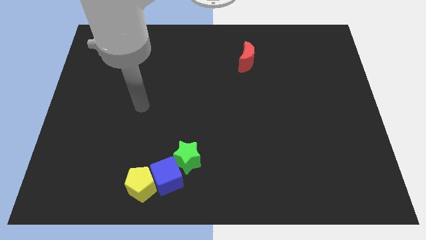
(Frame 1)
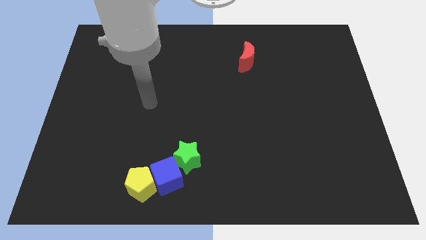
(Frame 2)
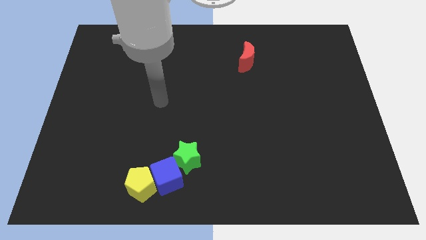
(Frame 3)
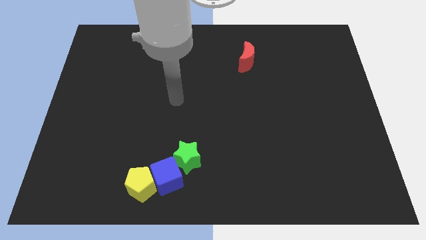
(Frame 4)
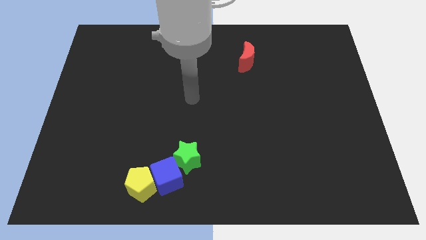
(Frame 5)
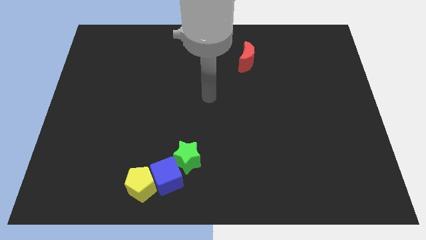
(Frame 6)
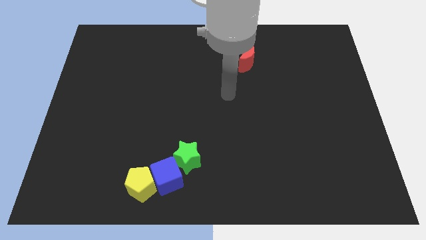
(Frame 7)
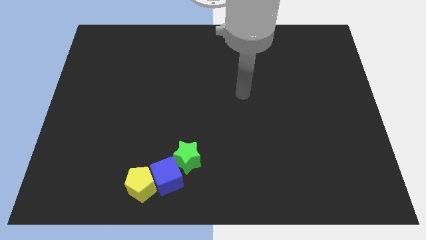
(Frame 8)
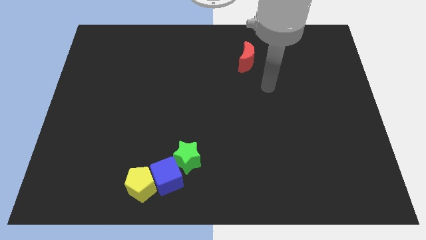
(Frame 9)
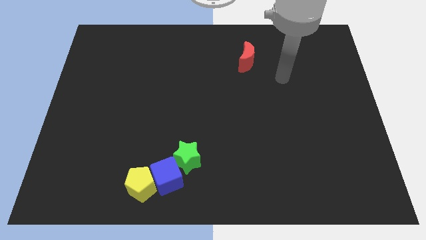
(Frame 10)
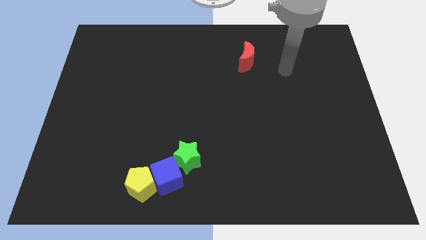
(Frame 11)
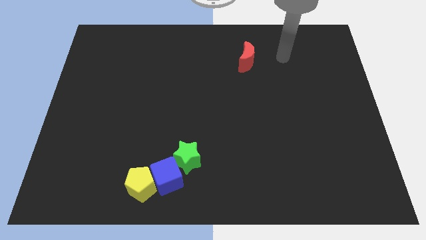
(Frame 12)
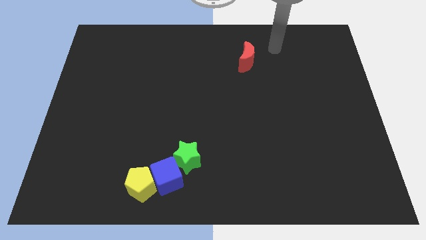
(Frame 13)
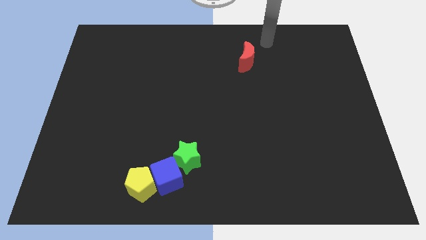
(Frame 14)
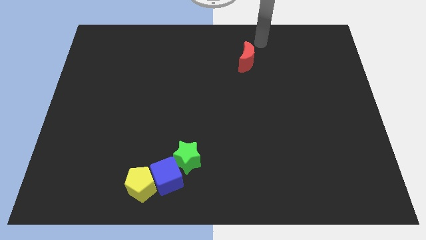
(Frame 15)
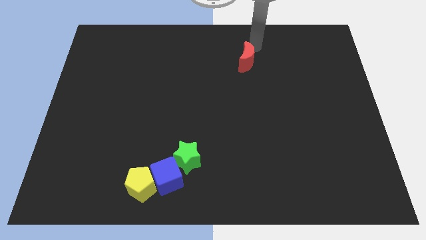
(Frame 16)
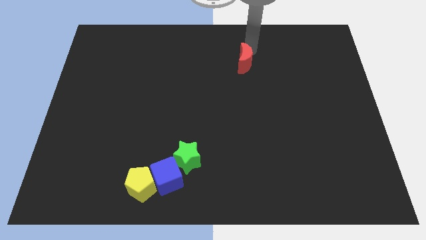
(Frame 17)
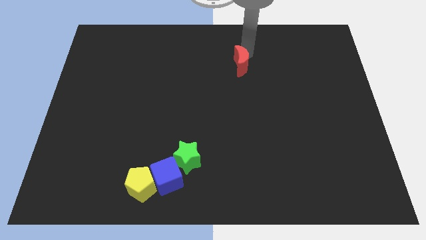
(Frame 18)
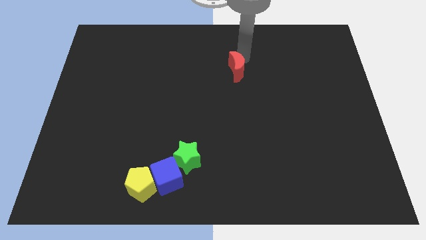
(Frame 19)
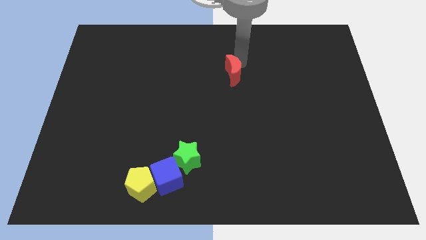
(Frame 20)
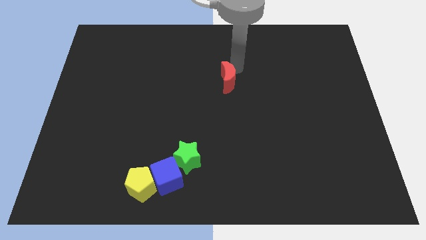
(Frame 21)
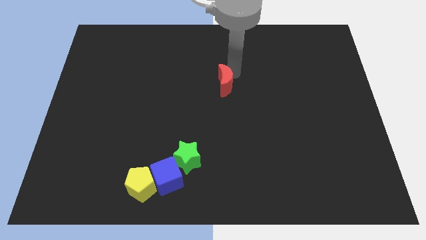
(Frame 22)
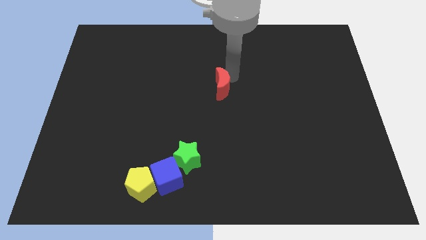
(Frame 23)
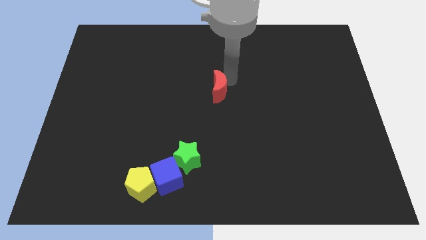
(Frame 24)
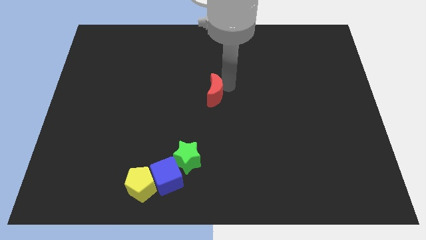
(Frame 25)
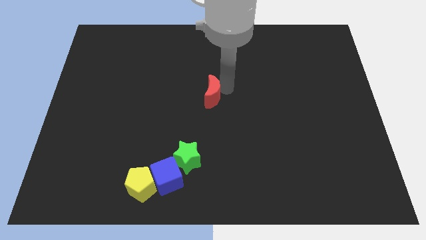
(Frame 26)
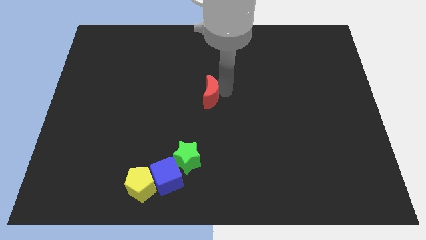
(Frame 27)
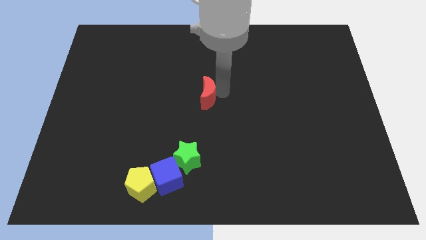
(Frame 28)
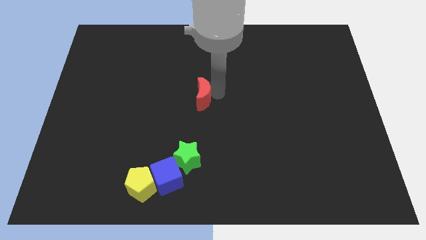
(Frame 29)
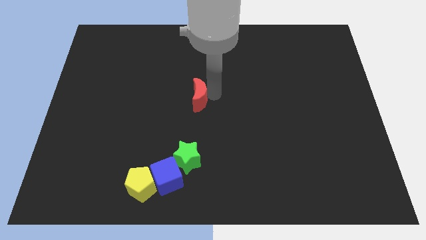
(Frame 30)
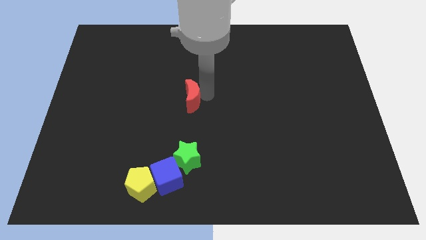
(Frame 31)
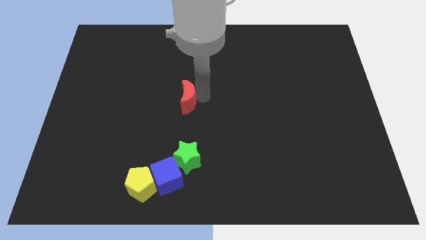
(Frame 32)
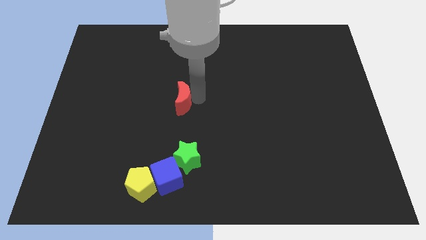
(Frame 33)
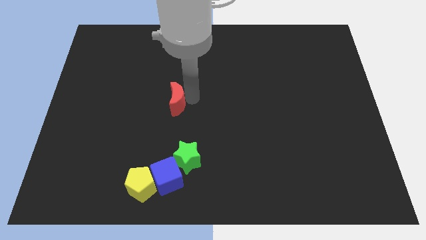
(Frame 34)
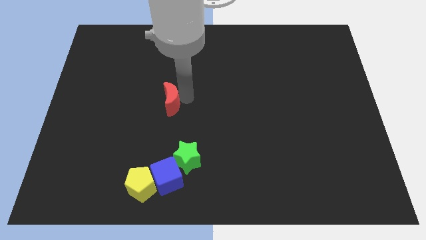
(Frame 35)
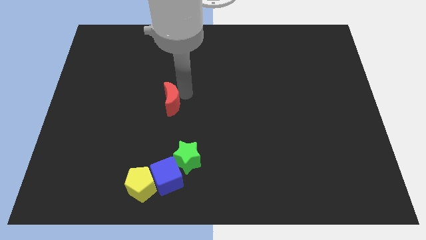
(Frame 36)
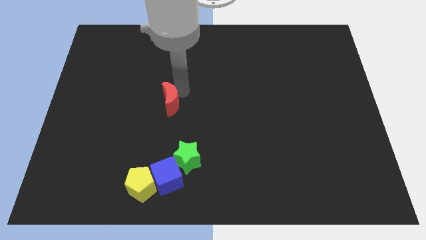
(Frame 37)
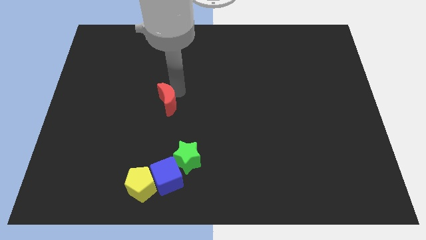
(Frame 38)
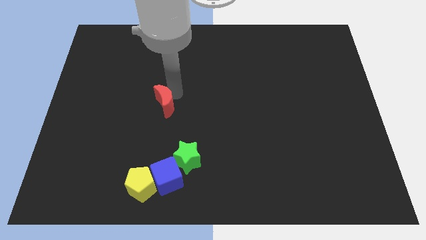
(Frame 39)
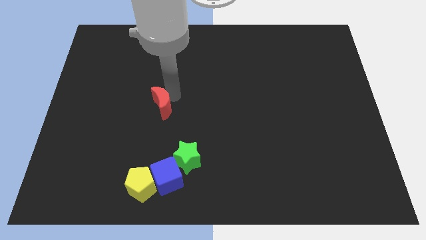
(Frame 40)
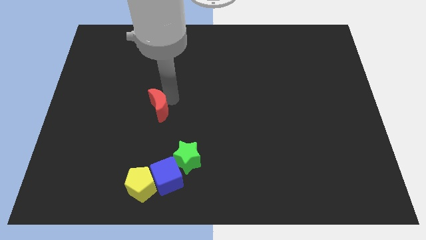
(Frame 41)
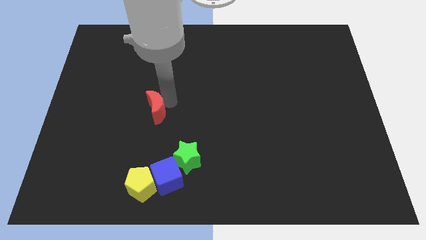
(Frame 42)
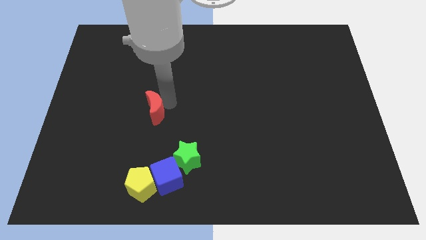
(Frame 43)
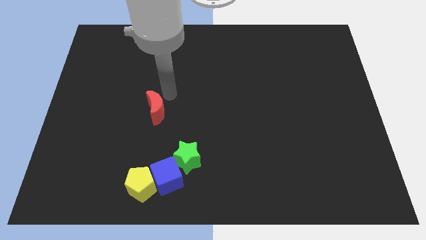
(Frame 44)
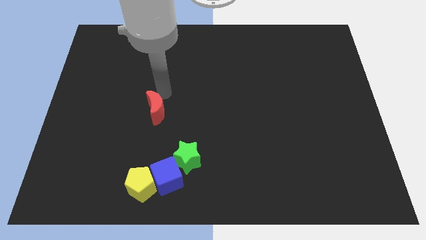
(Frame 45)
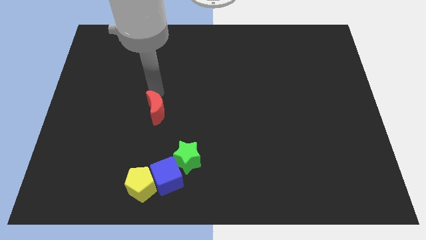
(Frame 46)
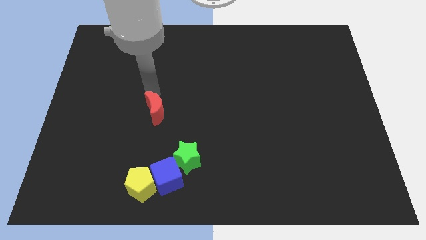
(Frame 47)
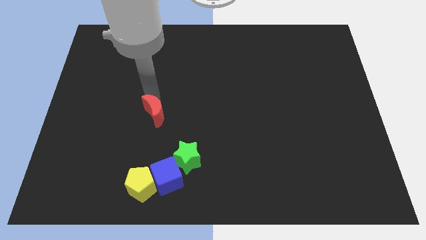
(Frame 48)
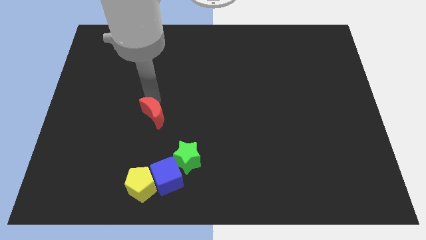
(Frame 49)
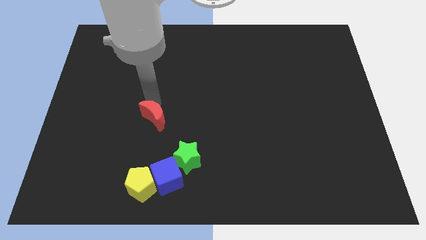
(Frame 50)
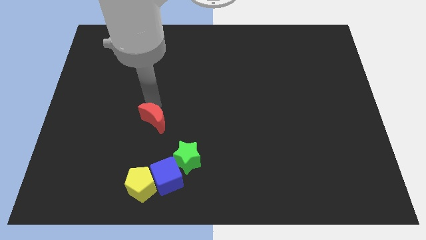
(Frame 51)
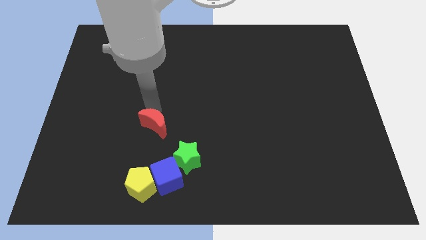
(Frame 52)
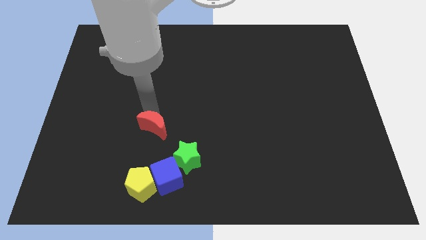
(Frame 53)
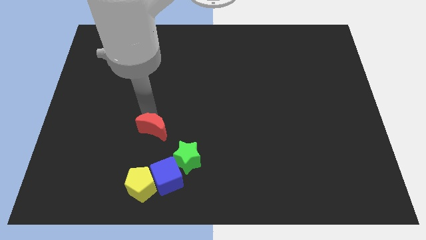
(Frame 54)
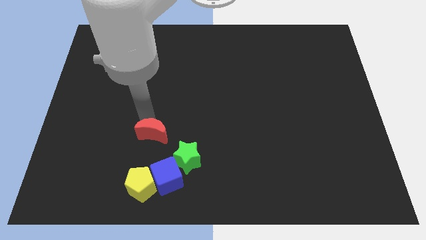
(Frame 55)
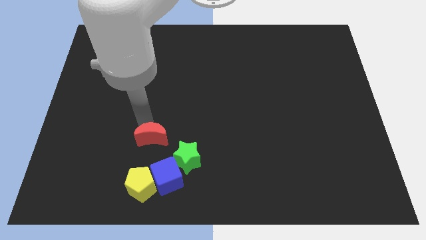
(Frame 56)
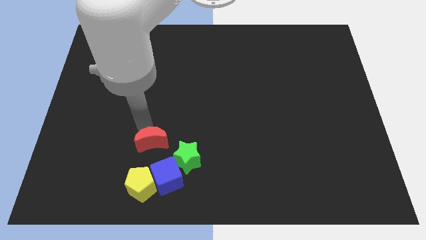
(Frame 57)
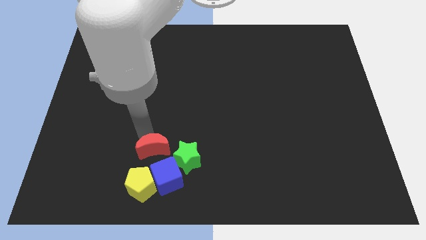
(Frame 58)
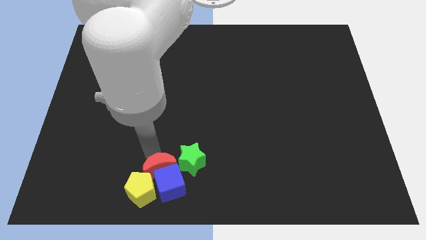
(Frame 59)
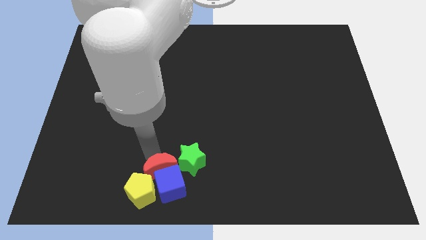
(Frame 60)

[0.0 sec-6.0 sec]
push the red block towards the blue block

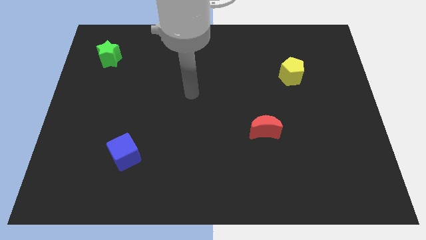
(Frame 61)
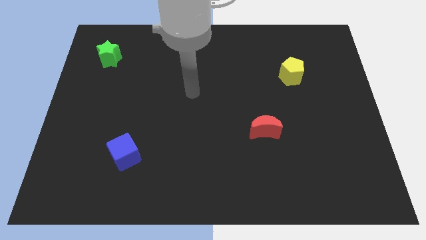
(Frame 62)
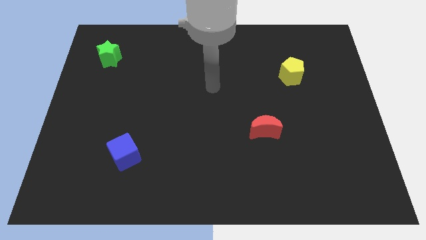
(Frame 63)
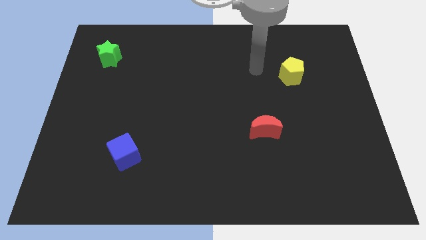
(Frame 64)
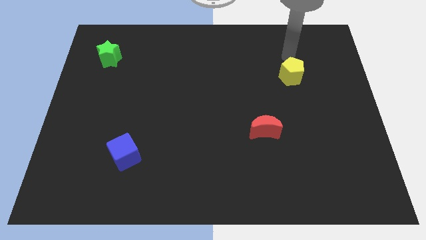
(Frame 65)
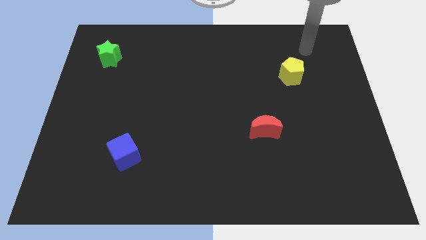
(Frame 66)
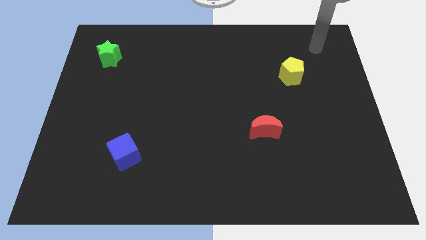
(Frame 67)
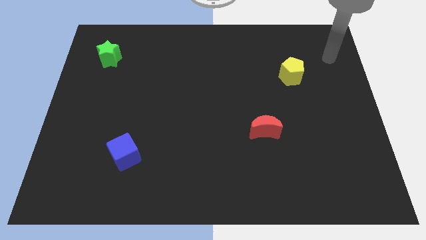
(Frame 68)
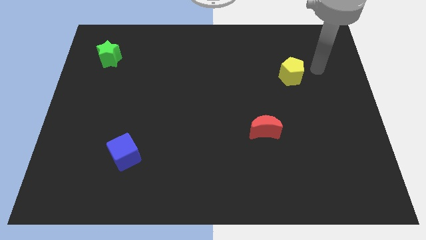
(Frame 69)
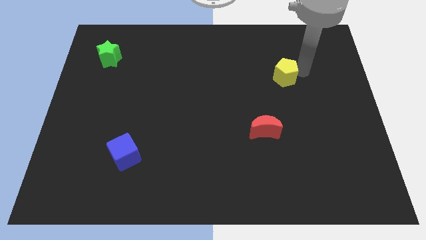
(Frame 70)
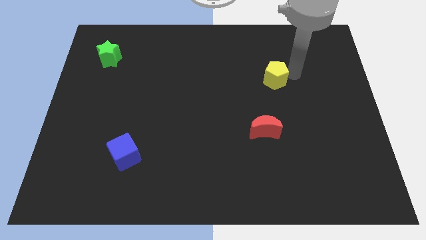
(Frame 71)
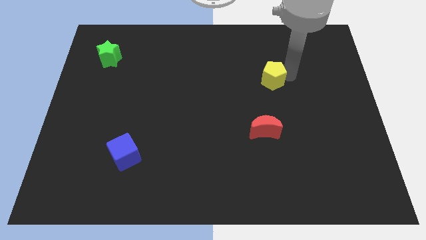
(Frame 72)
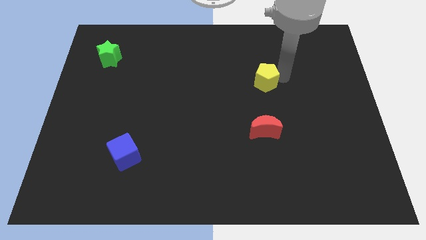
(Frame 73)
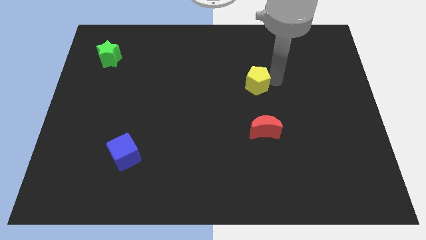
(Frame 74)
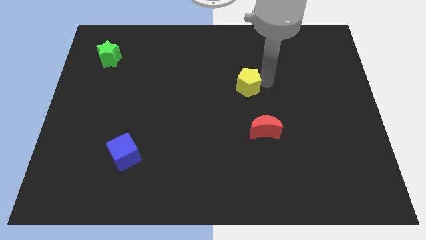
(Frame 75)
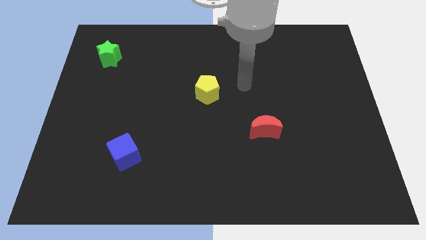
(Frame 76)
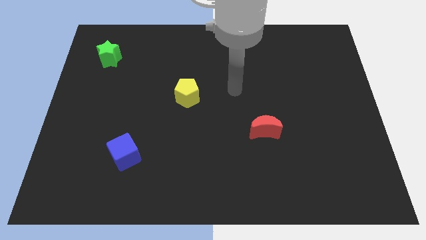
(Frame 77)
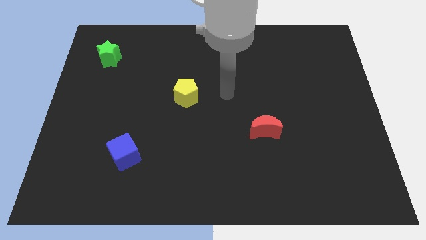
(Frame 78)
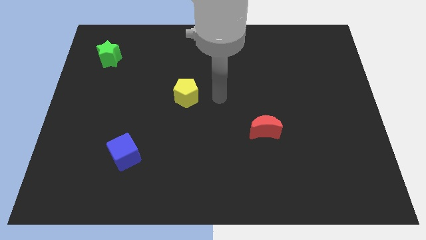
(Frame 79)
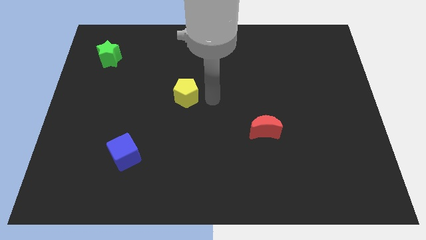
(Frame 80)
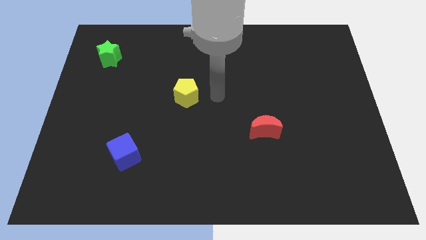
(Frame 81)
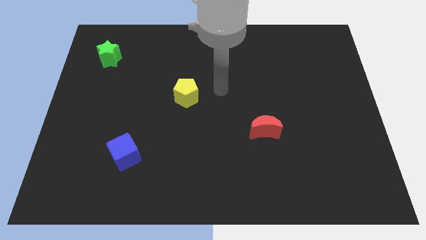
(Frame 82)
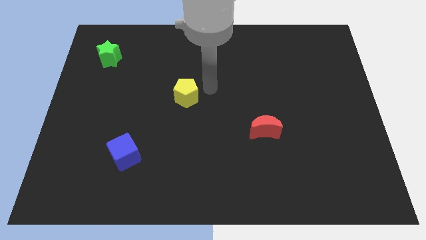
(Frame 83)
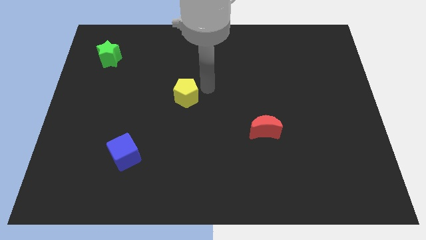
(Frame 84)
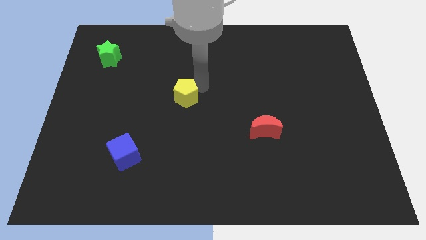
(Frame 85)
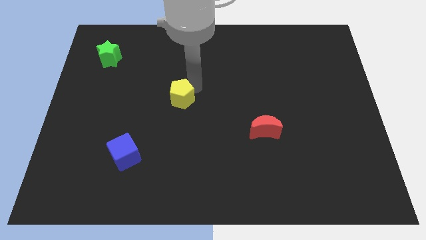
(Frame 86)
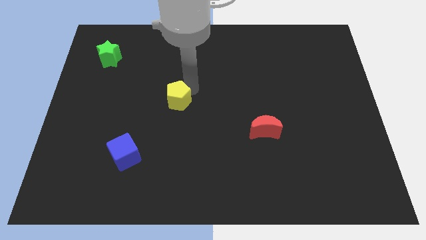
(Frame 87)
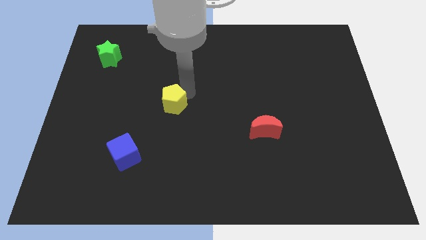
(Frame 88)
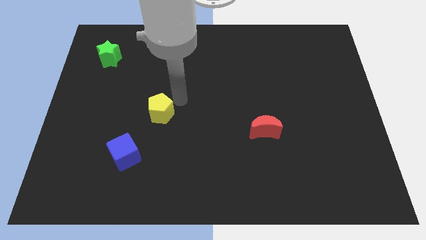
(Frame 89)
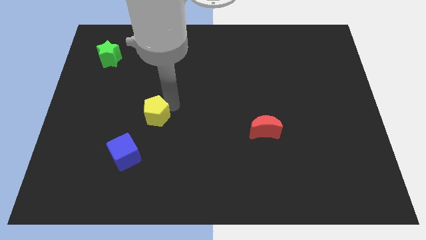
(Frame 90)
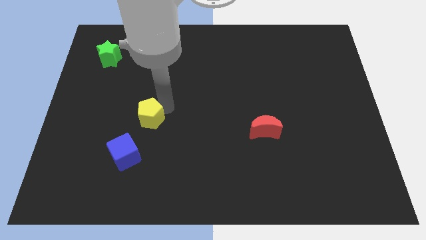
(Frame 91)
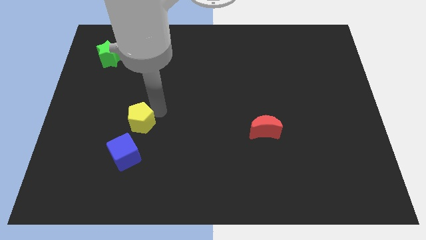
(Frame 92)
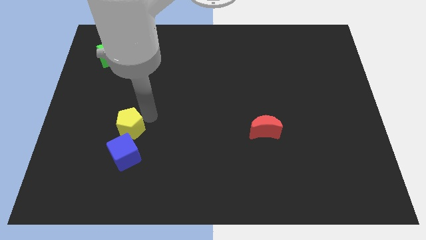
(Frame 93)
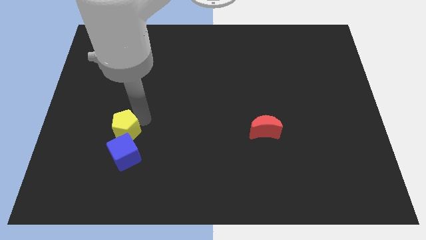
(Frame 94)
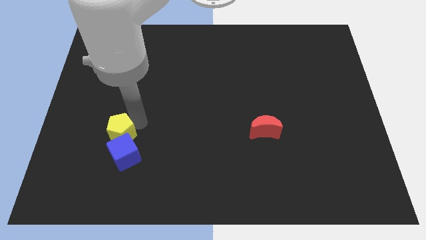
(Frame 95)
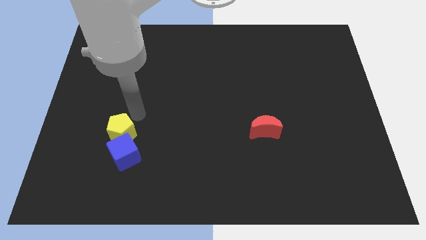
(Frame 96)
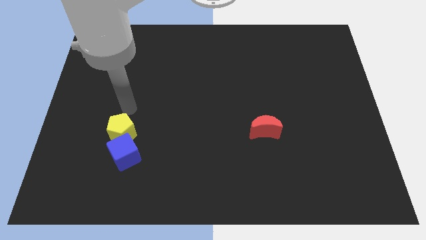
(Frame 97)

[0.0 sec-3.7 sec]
move the yellow block to the blue block
